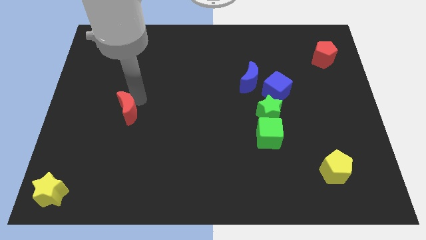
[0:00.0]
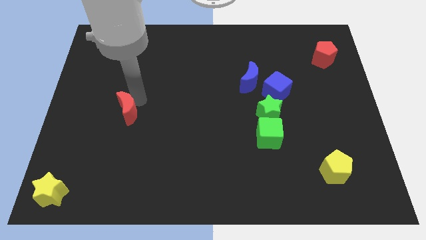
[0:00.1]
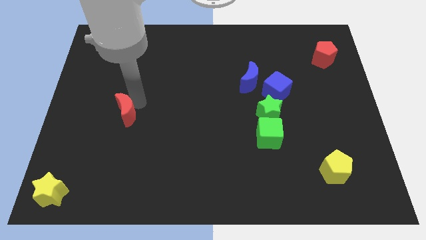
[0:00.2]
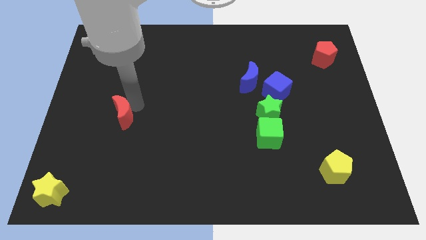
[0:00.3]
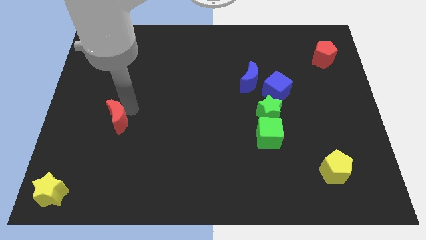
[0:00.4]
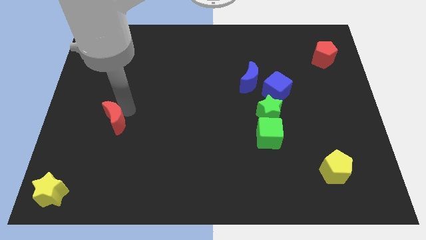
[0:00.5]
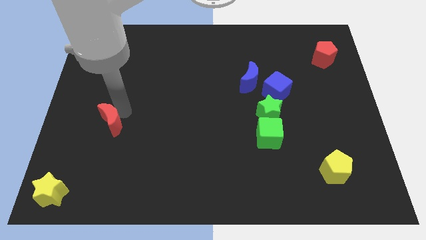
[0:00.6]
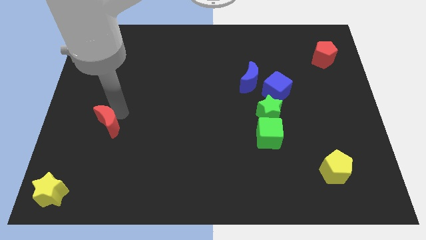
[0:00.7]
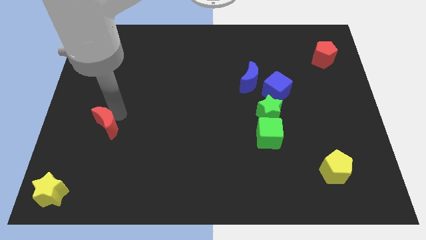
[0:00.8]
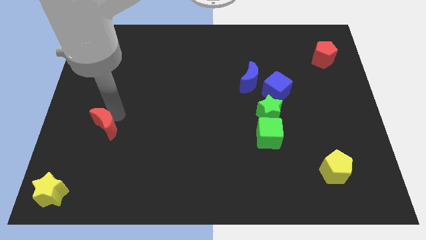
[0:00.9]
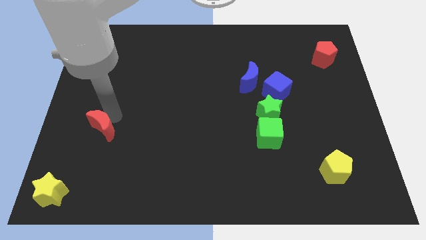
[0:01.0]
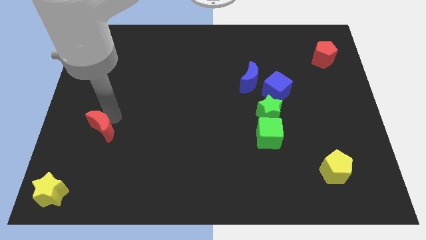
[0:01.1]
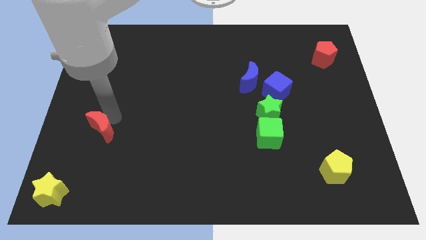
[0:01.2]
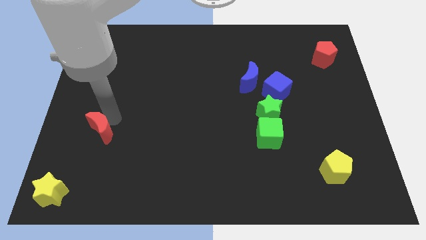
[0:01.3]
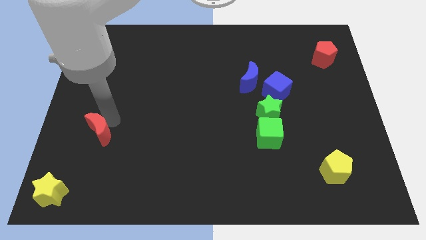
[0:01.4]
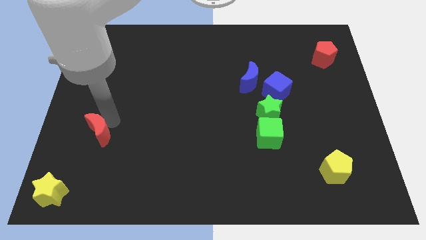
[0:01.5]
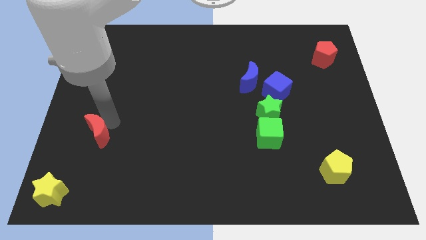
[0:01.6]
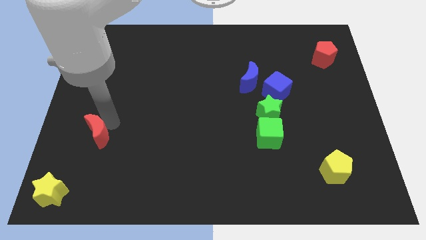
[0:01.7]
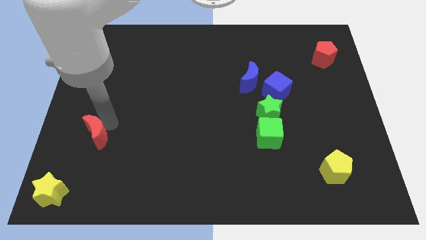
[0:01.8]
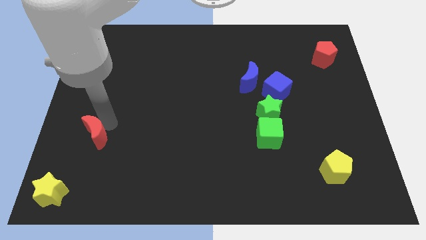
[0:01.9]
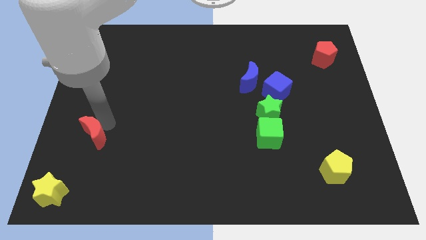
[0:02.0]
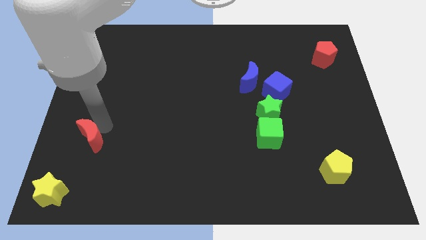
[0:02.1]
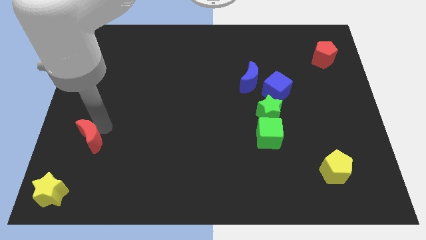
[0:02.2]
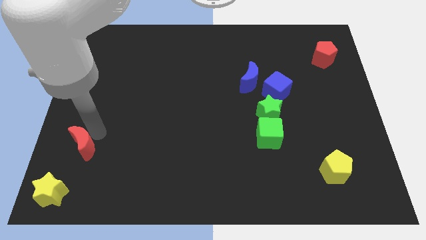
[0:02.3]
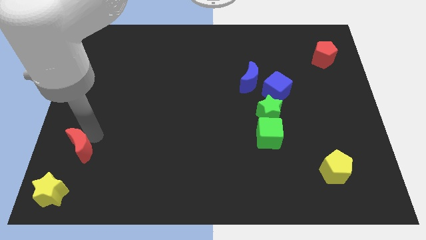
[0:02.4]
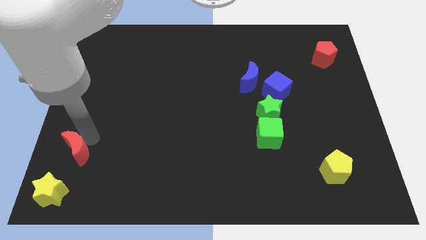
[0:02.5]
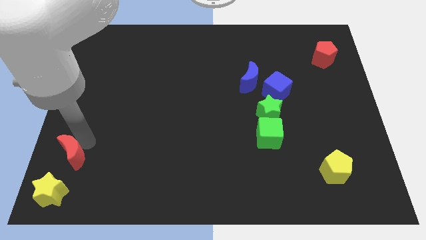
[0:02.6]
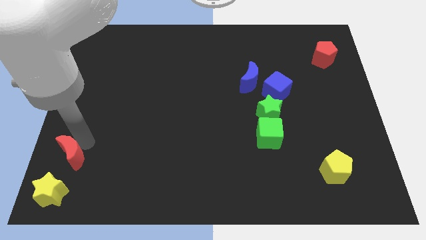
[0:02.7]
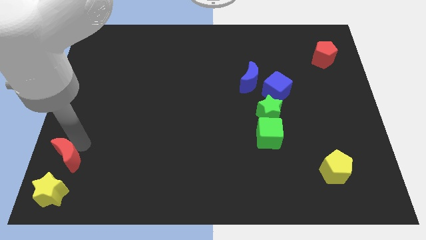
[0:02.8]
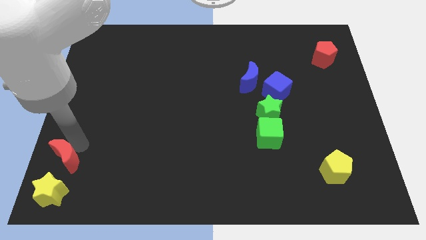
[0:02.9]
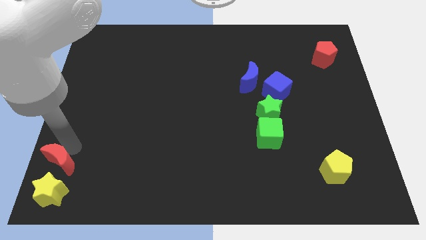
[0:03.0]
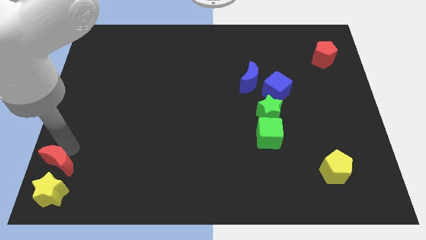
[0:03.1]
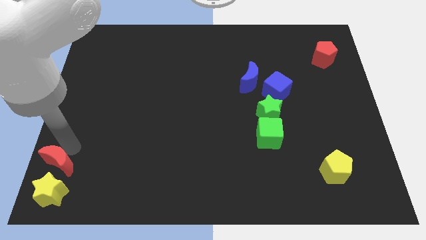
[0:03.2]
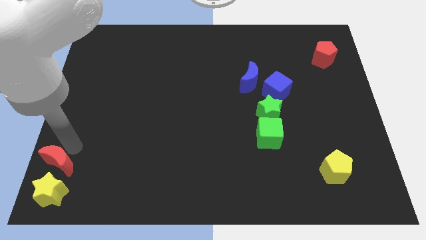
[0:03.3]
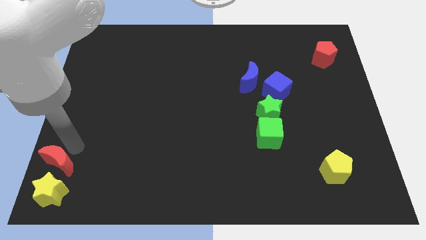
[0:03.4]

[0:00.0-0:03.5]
place red moon to the top of yellow star

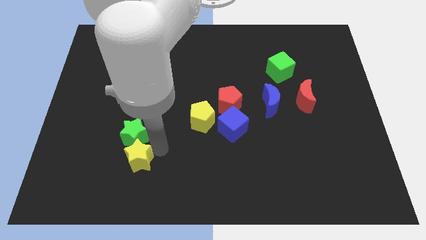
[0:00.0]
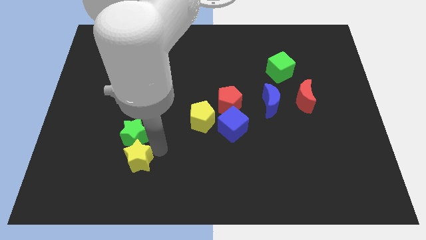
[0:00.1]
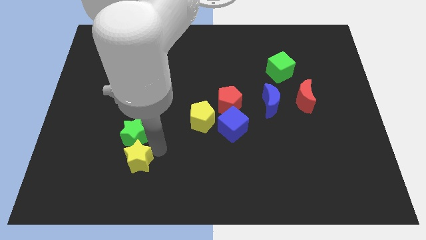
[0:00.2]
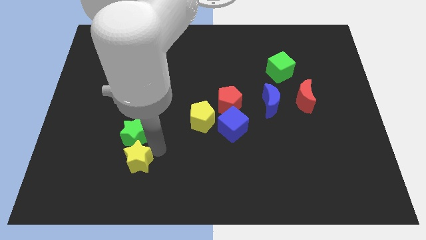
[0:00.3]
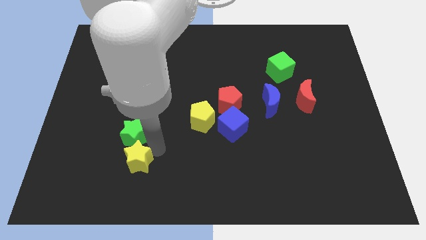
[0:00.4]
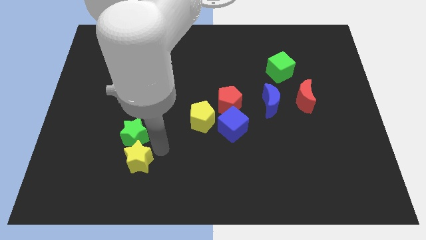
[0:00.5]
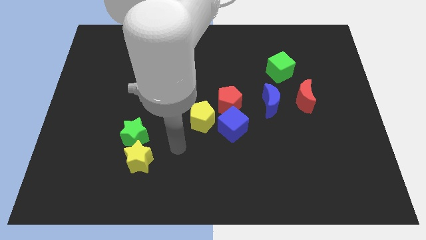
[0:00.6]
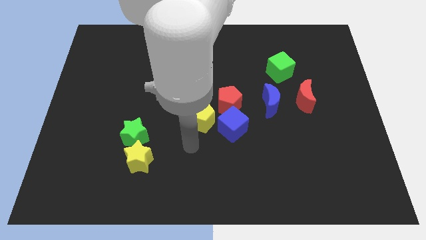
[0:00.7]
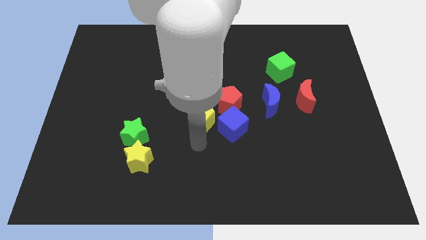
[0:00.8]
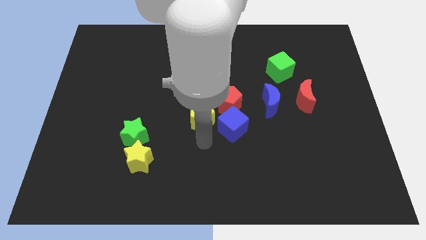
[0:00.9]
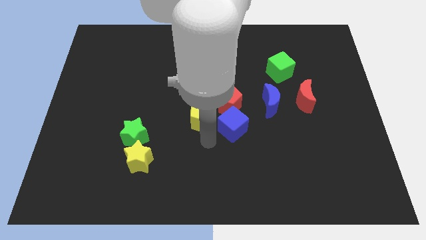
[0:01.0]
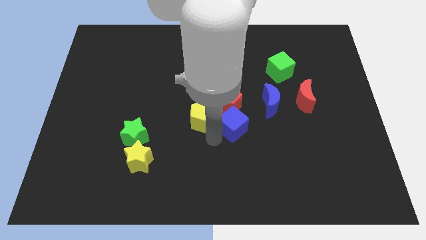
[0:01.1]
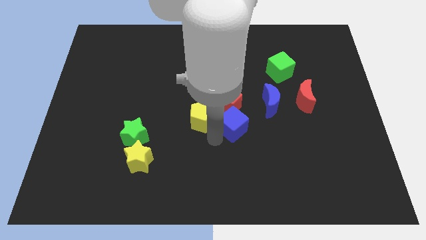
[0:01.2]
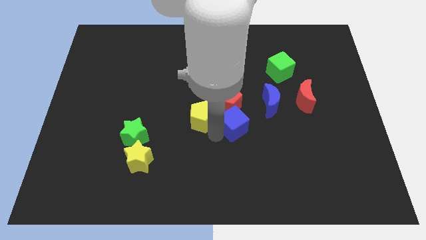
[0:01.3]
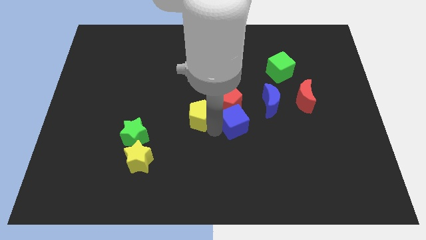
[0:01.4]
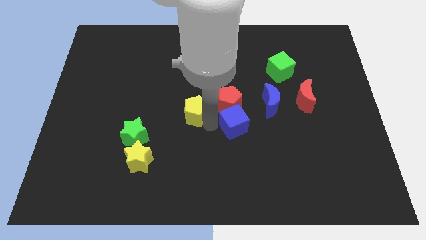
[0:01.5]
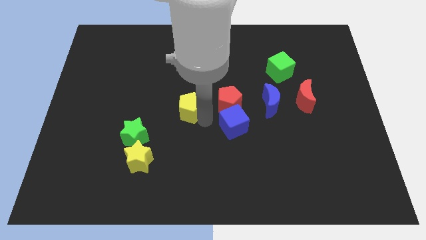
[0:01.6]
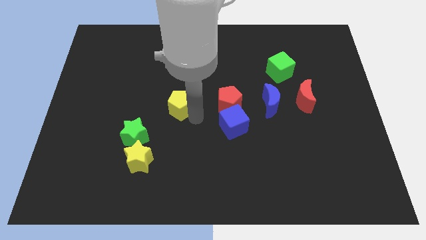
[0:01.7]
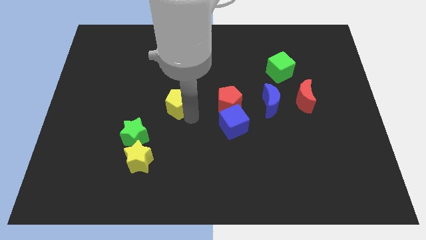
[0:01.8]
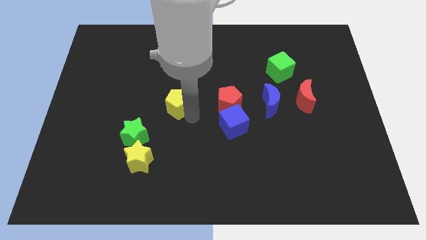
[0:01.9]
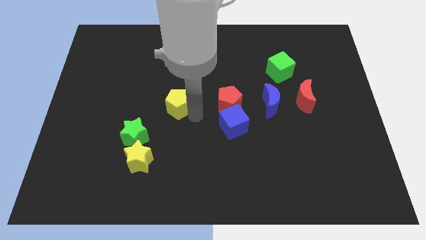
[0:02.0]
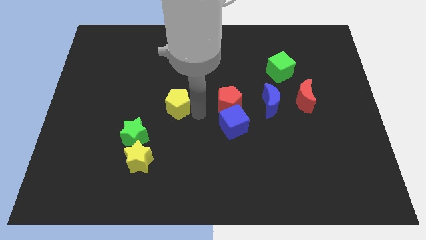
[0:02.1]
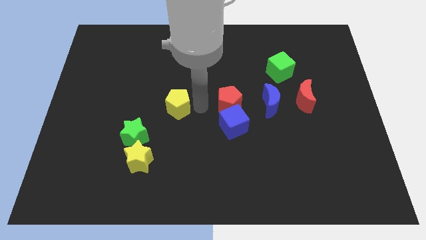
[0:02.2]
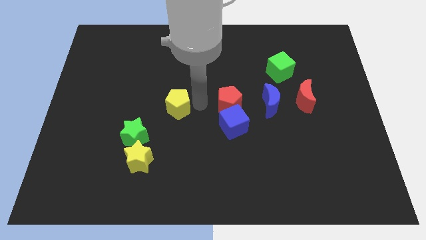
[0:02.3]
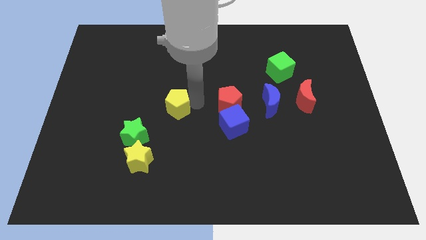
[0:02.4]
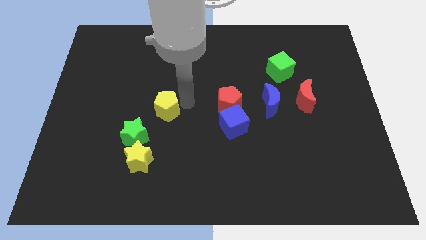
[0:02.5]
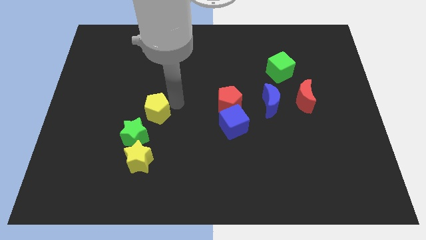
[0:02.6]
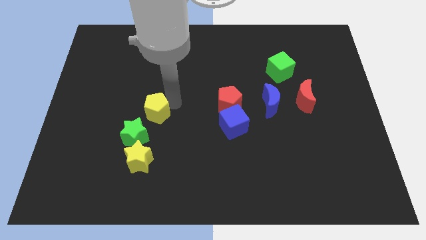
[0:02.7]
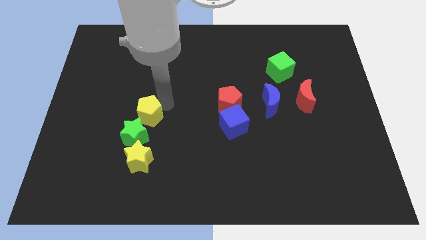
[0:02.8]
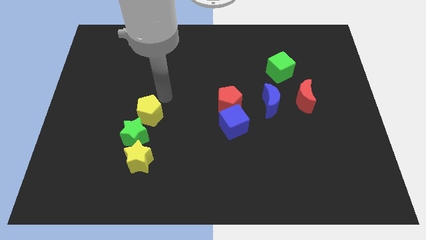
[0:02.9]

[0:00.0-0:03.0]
place yellow pentagon diagonal up right of green star

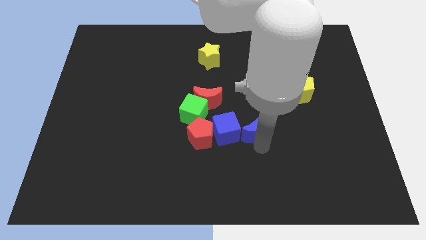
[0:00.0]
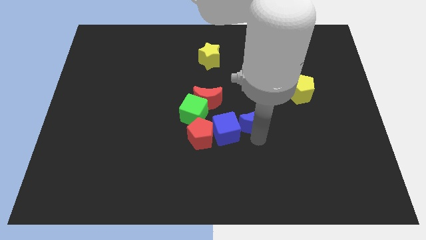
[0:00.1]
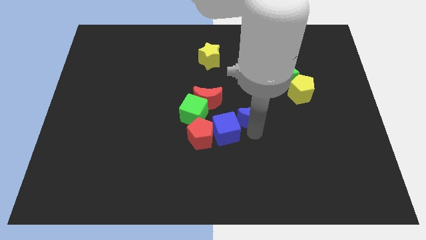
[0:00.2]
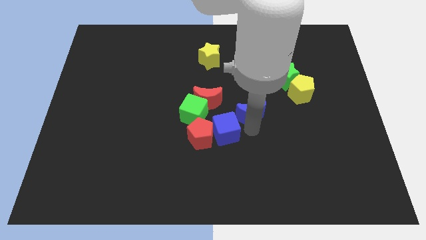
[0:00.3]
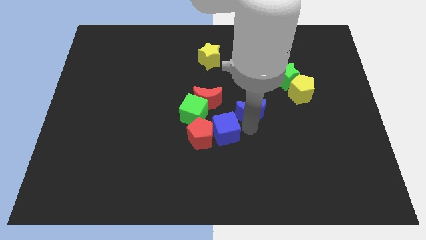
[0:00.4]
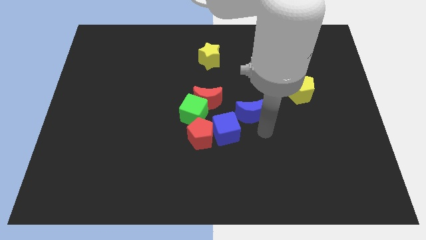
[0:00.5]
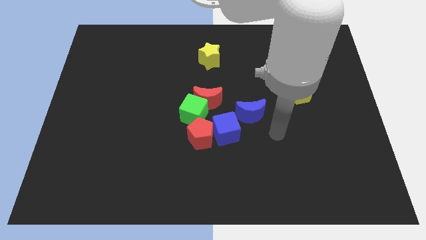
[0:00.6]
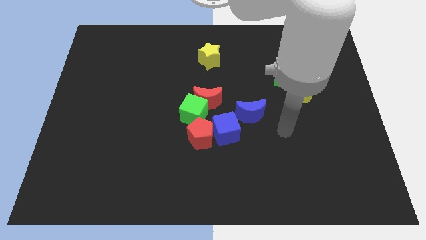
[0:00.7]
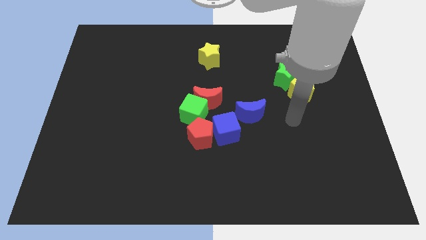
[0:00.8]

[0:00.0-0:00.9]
place blue moon to the top right of blue cube

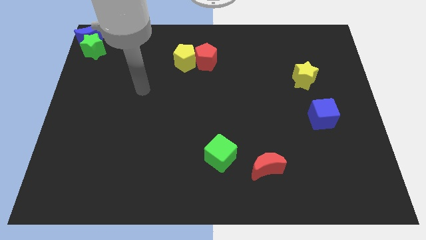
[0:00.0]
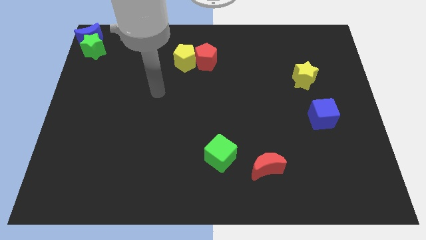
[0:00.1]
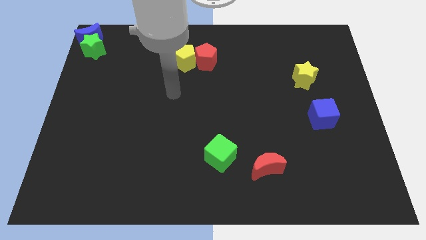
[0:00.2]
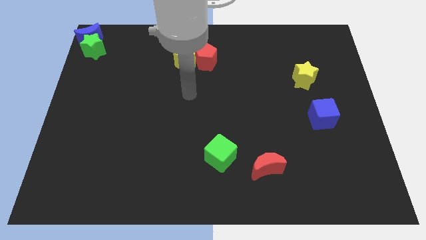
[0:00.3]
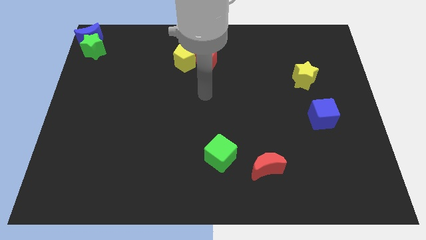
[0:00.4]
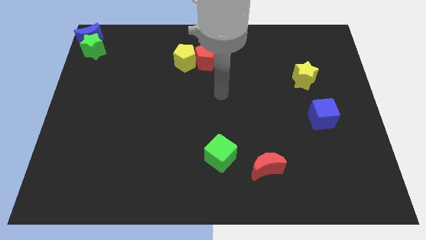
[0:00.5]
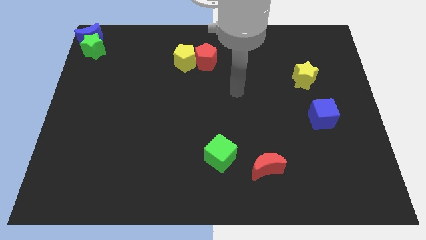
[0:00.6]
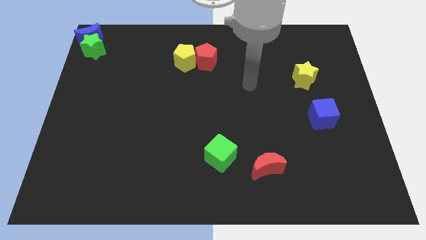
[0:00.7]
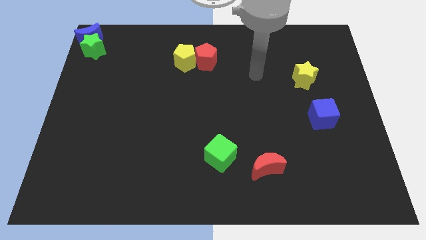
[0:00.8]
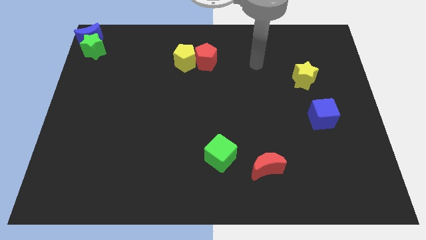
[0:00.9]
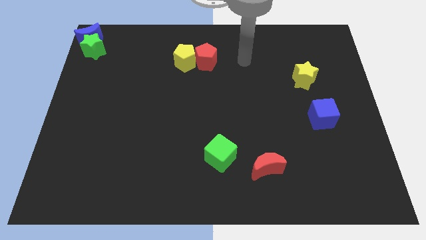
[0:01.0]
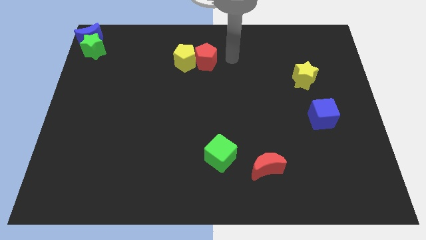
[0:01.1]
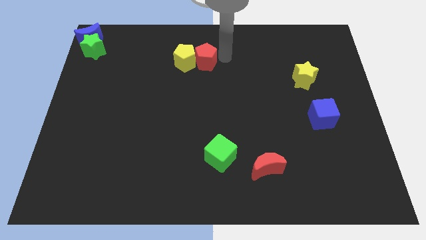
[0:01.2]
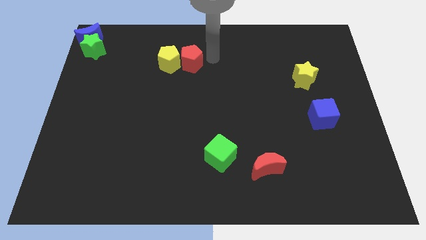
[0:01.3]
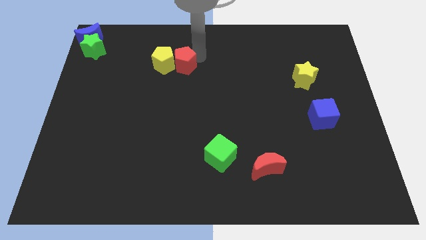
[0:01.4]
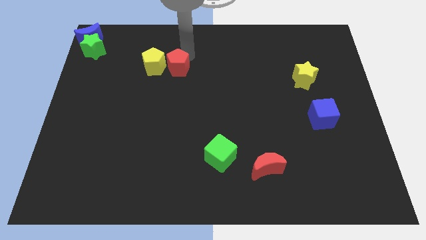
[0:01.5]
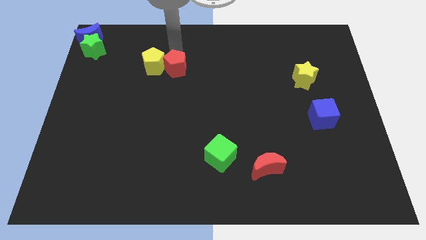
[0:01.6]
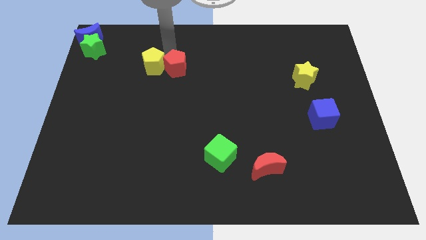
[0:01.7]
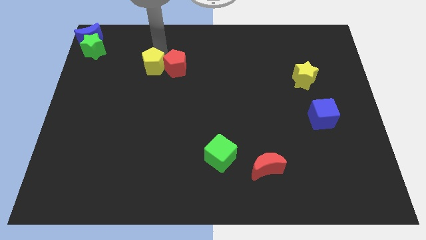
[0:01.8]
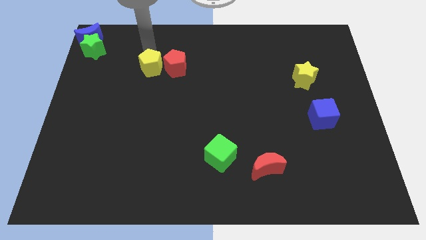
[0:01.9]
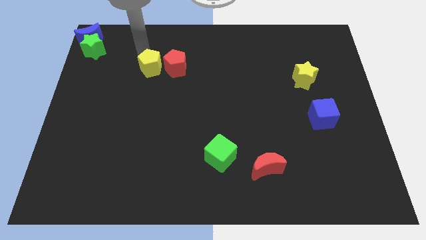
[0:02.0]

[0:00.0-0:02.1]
push the red pentagon into the yellow pentagon
